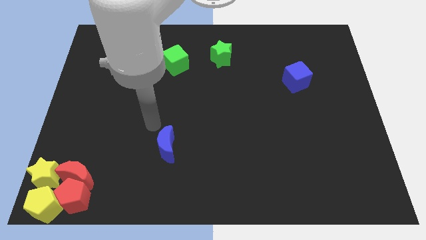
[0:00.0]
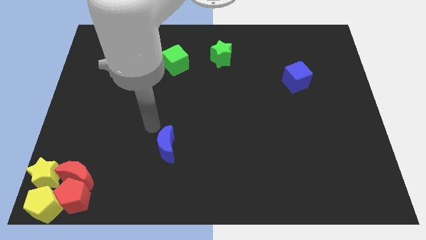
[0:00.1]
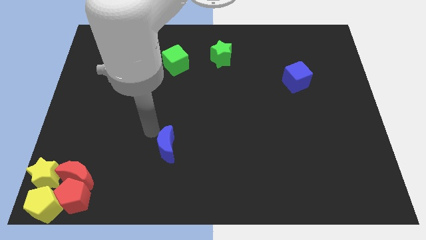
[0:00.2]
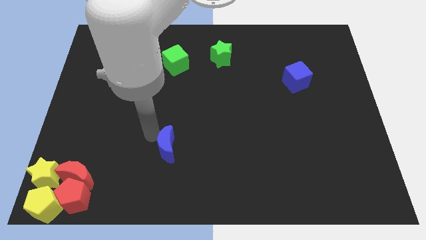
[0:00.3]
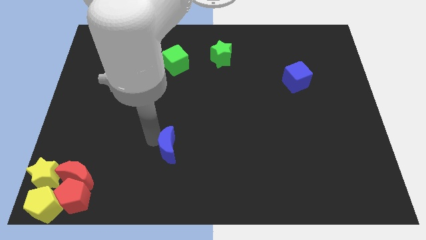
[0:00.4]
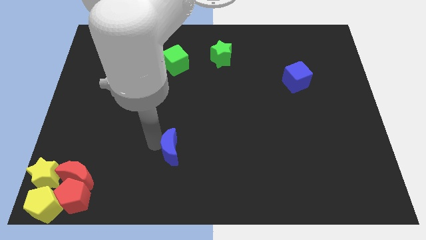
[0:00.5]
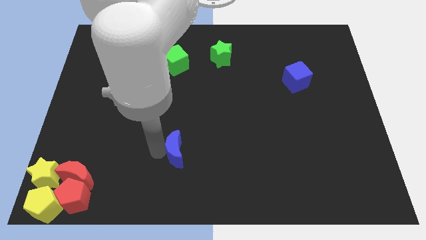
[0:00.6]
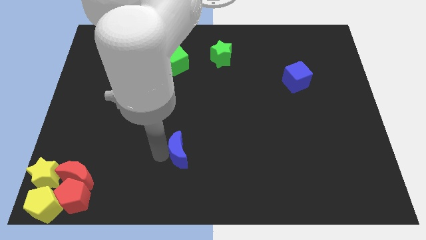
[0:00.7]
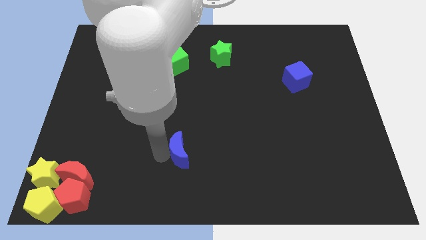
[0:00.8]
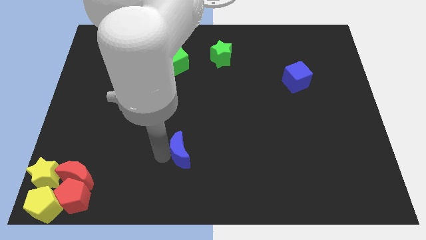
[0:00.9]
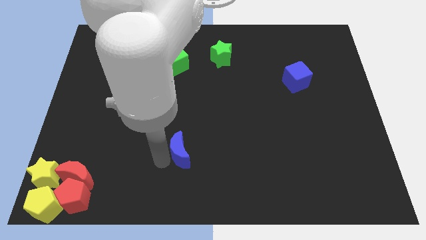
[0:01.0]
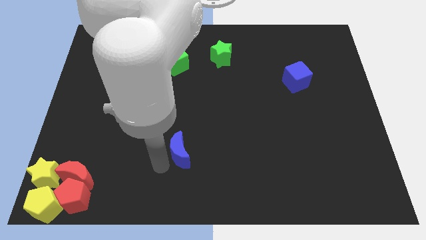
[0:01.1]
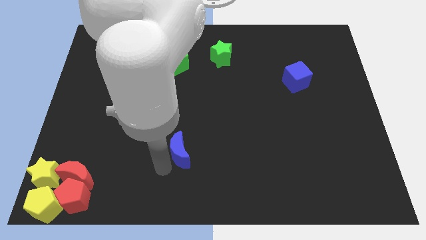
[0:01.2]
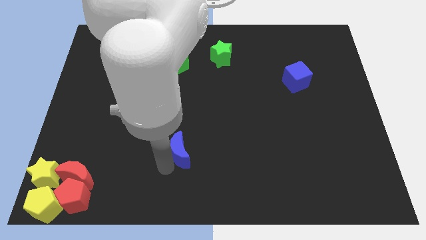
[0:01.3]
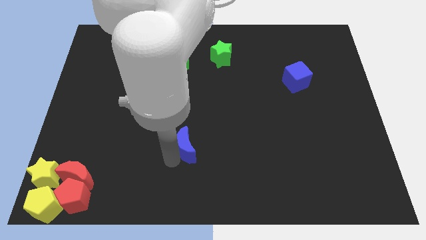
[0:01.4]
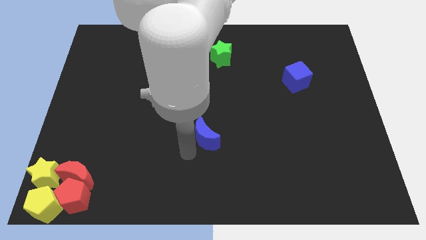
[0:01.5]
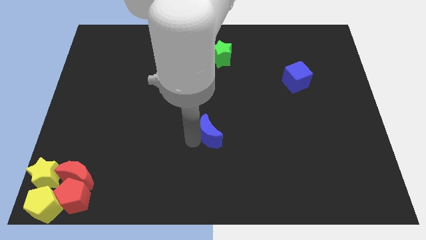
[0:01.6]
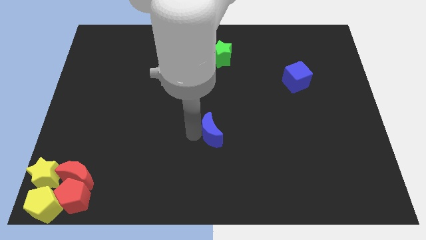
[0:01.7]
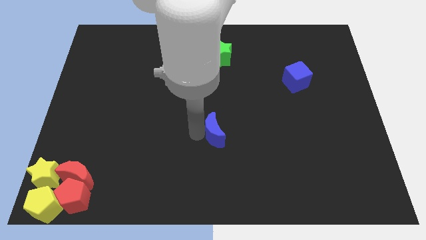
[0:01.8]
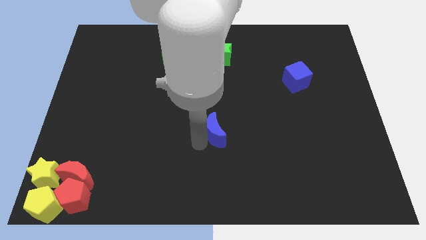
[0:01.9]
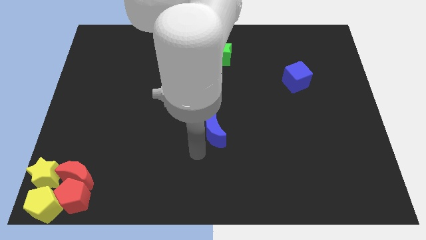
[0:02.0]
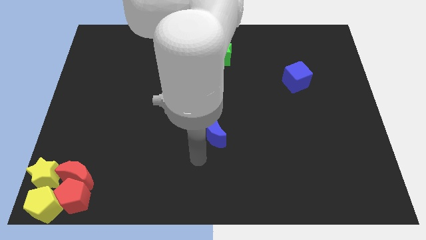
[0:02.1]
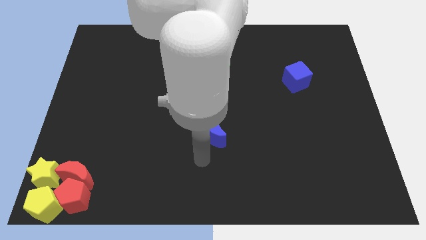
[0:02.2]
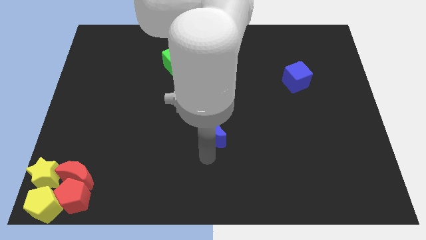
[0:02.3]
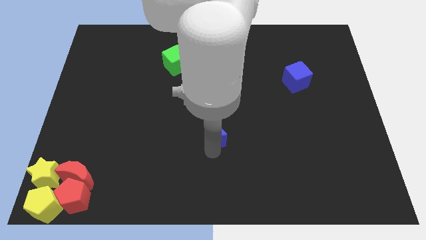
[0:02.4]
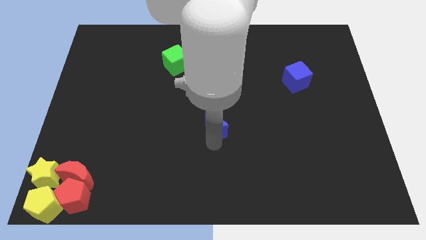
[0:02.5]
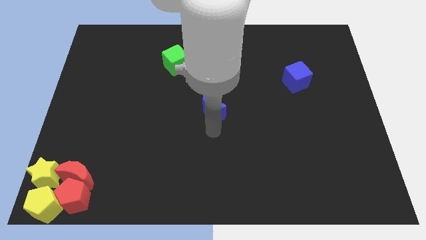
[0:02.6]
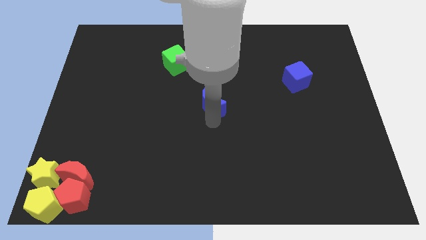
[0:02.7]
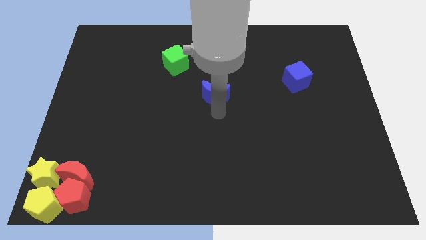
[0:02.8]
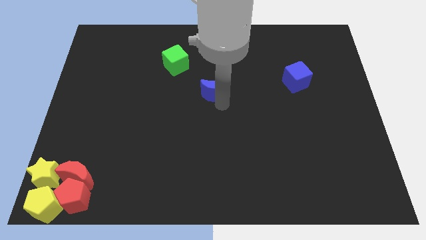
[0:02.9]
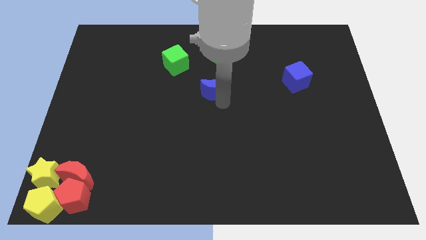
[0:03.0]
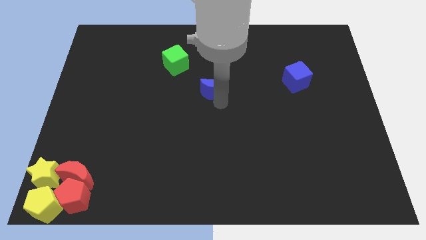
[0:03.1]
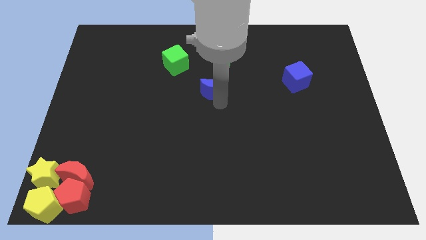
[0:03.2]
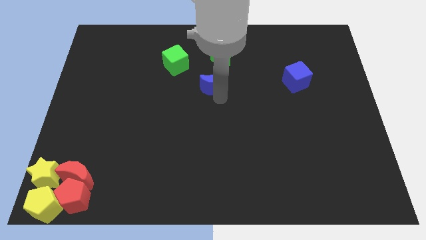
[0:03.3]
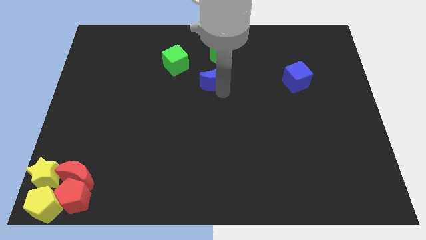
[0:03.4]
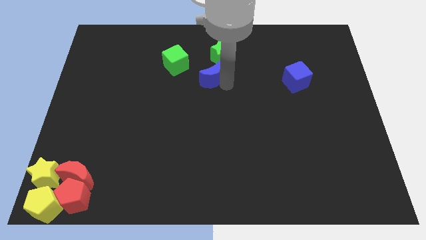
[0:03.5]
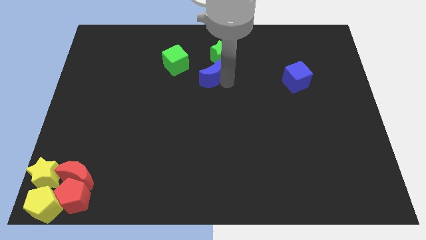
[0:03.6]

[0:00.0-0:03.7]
place blue moon below the green star

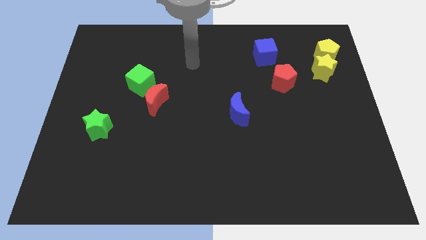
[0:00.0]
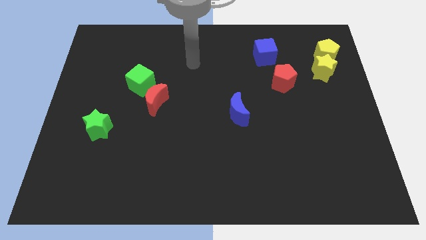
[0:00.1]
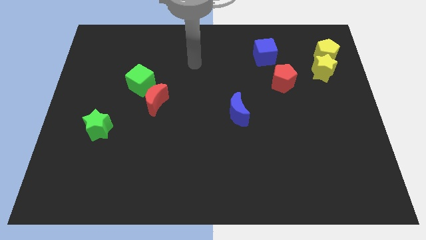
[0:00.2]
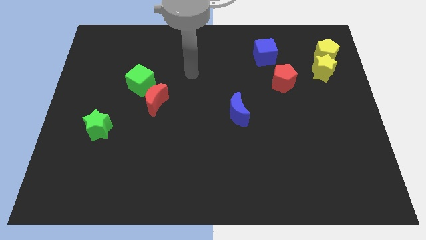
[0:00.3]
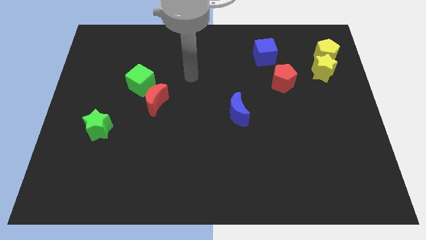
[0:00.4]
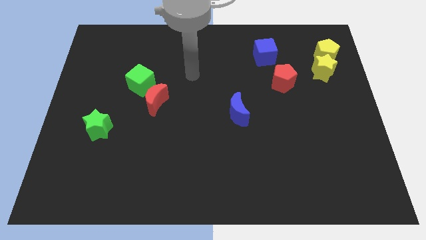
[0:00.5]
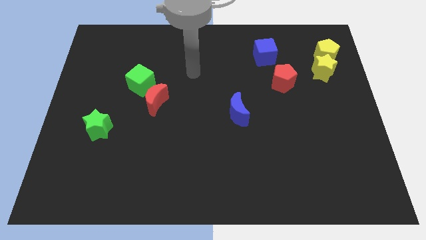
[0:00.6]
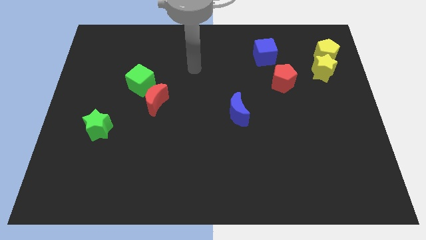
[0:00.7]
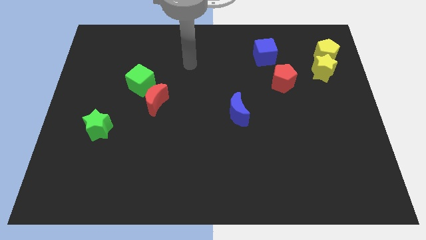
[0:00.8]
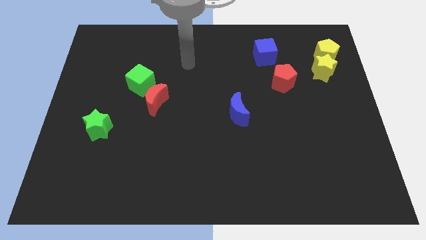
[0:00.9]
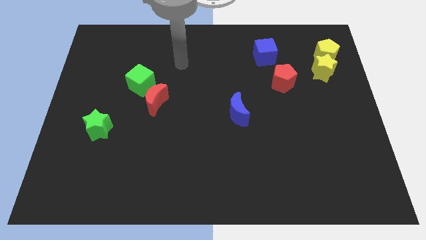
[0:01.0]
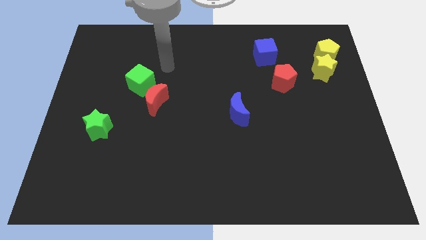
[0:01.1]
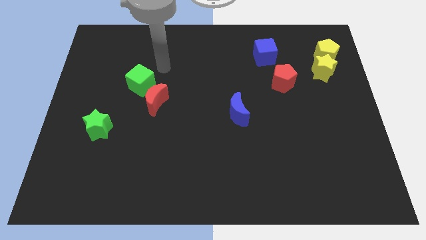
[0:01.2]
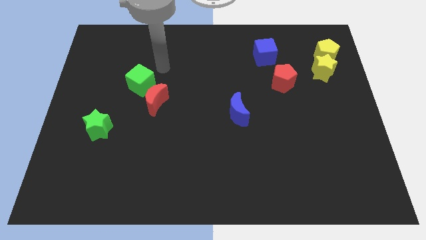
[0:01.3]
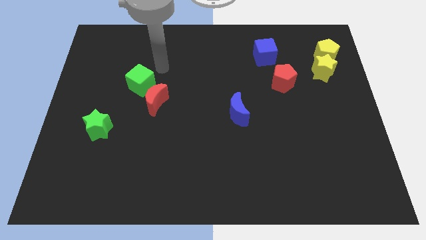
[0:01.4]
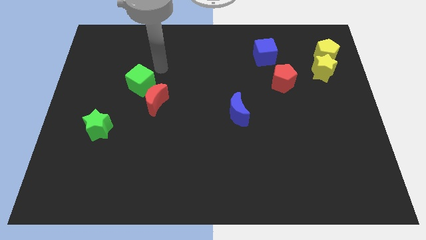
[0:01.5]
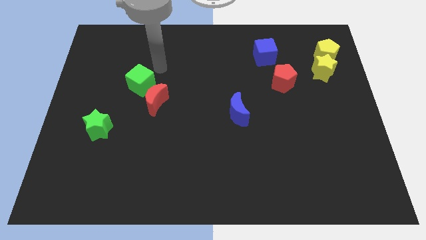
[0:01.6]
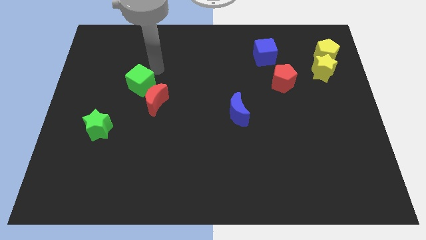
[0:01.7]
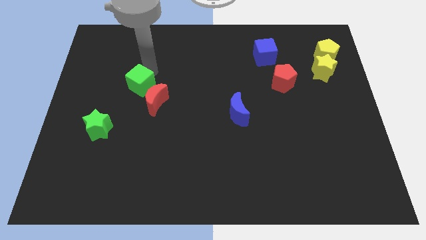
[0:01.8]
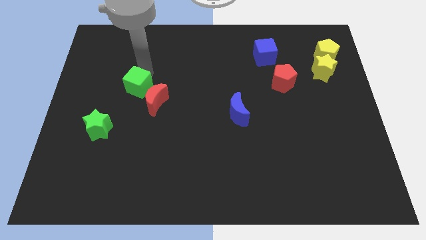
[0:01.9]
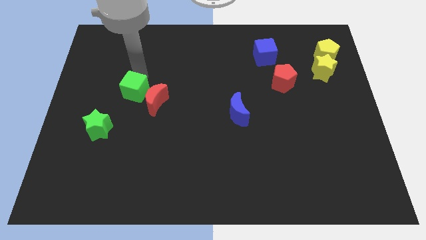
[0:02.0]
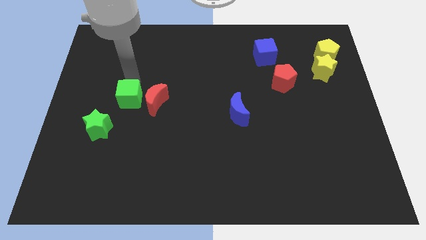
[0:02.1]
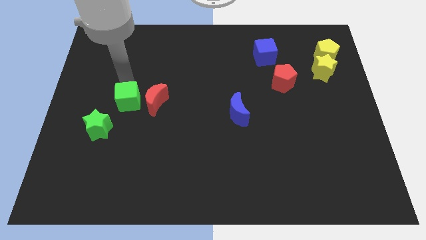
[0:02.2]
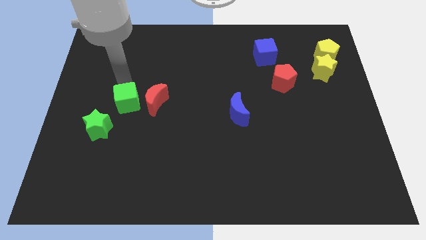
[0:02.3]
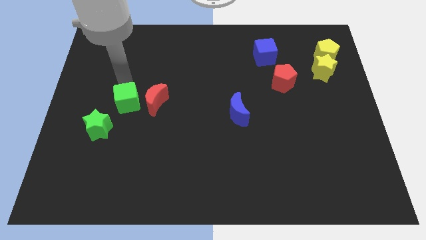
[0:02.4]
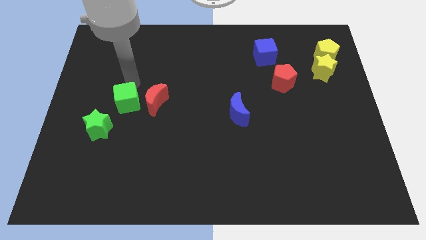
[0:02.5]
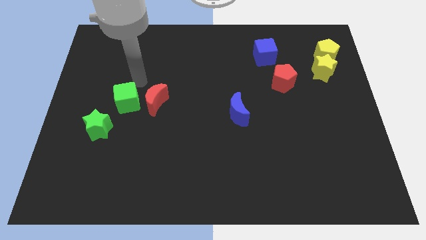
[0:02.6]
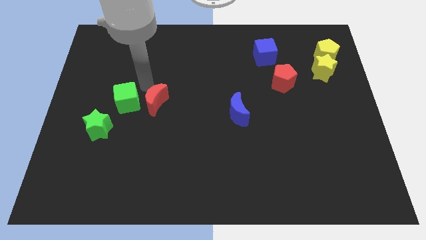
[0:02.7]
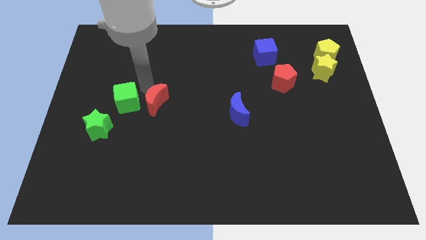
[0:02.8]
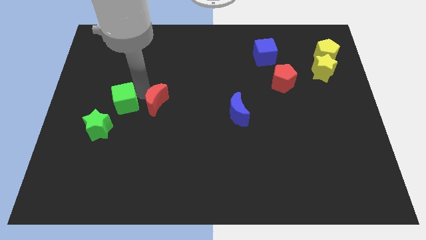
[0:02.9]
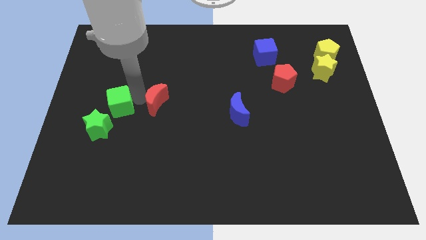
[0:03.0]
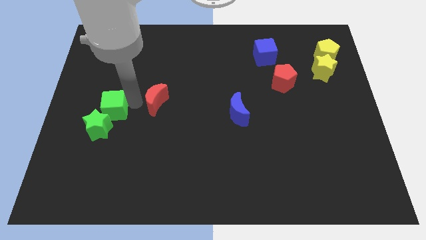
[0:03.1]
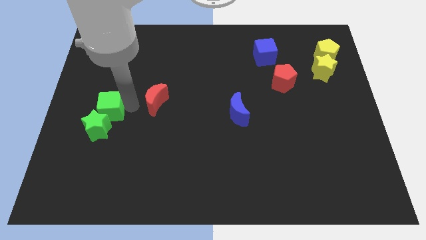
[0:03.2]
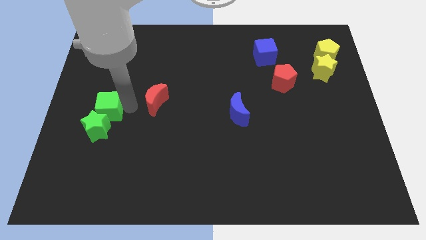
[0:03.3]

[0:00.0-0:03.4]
push the green cube above the green star

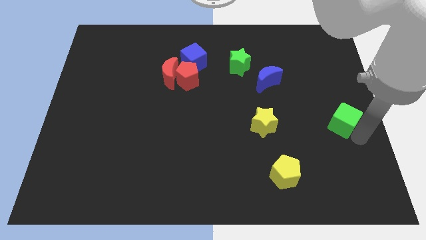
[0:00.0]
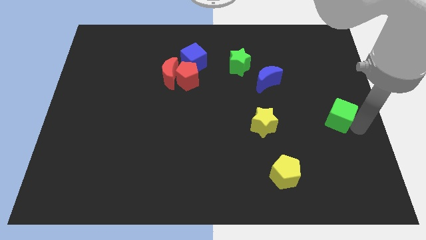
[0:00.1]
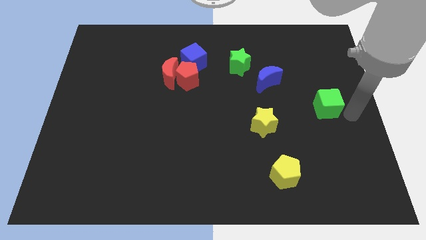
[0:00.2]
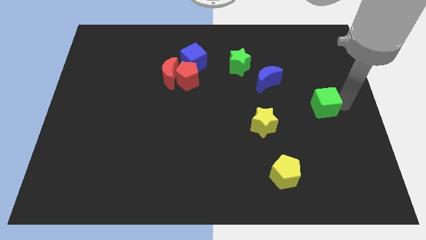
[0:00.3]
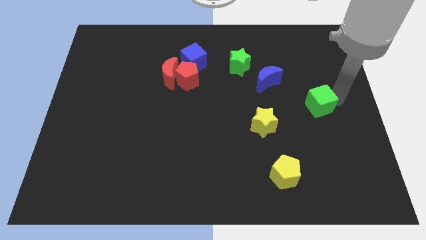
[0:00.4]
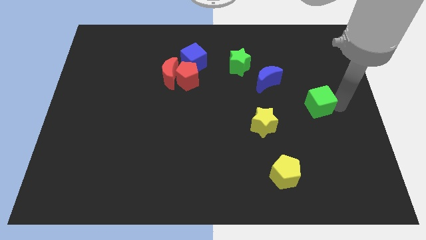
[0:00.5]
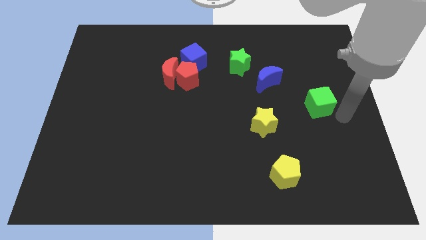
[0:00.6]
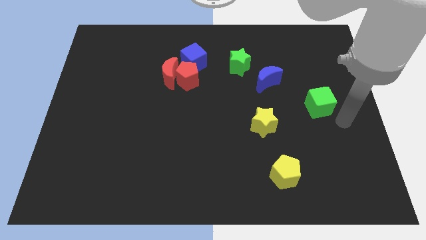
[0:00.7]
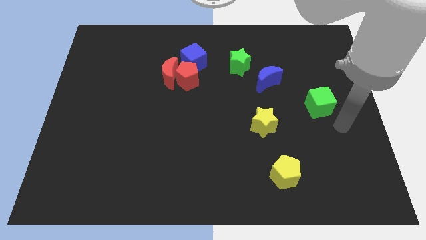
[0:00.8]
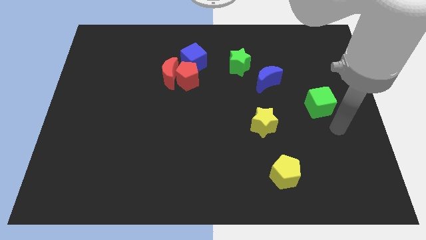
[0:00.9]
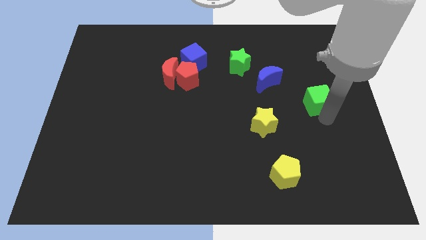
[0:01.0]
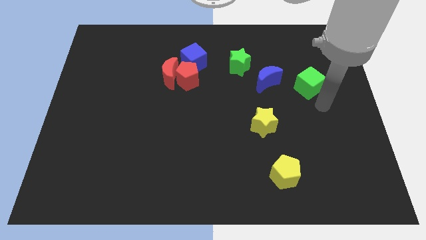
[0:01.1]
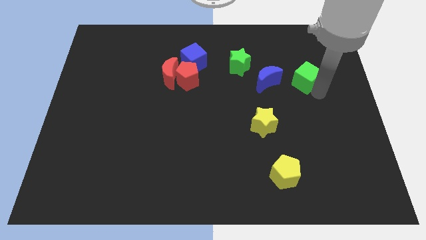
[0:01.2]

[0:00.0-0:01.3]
move the green cube right to the blue crescent

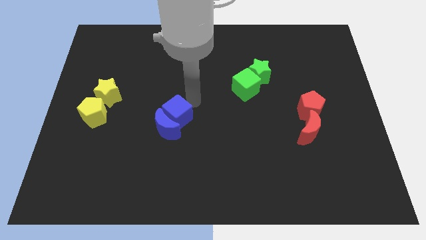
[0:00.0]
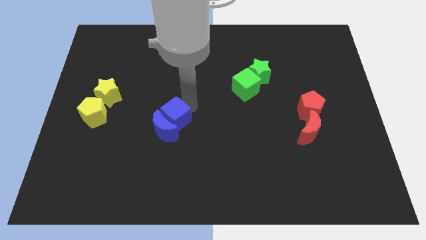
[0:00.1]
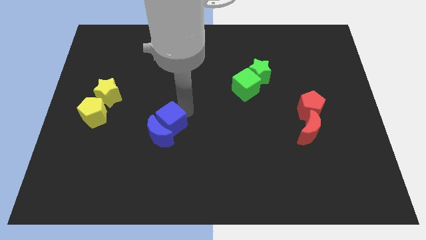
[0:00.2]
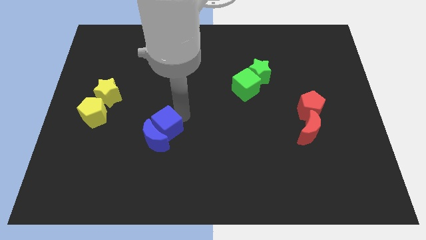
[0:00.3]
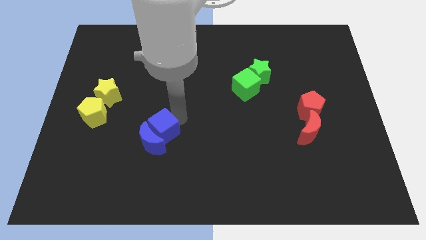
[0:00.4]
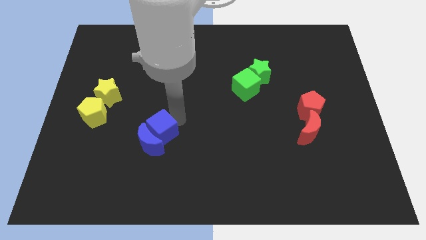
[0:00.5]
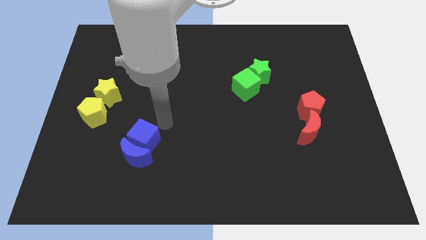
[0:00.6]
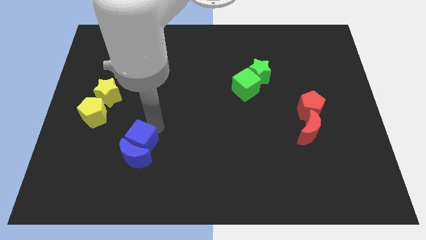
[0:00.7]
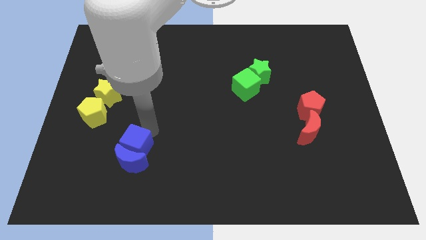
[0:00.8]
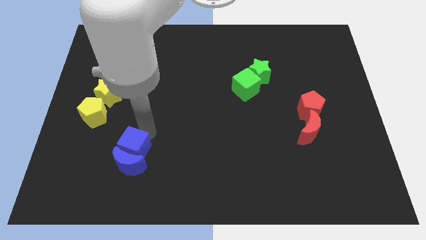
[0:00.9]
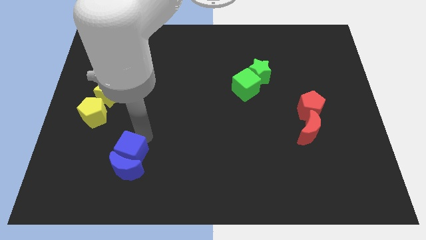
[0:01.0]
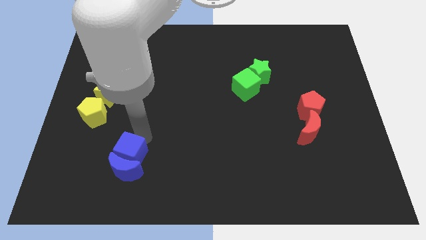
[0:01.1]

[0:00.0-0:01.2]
push the blue cube along with the blue crescent towards the bottom left of the board
